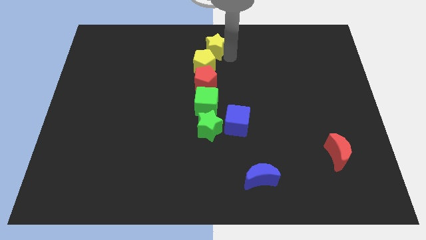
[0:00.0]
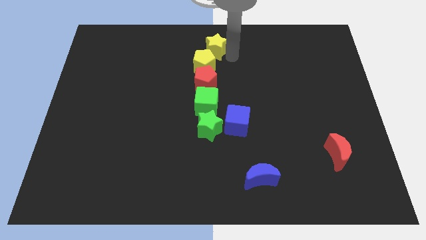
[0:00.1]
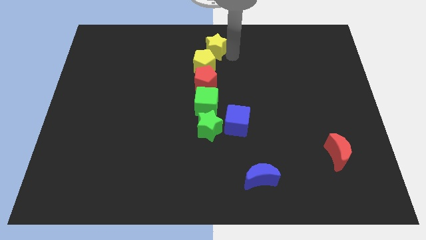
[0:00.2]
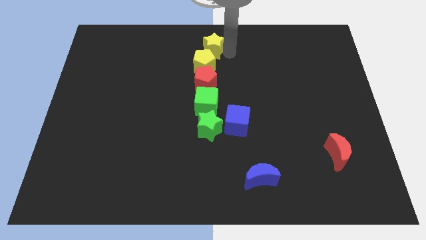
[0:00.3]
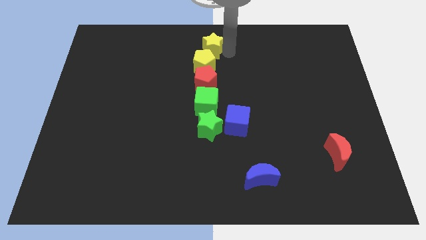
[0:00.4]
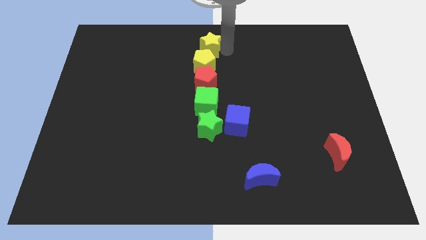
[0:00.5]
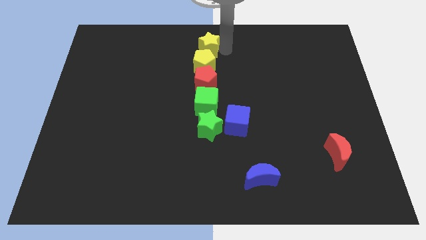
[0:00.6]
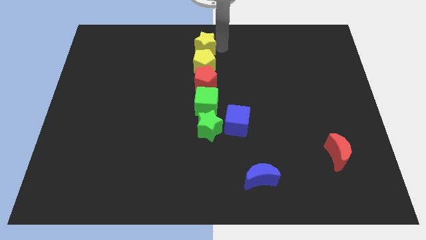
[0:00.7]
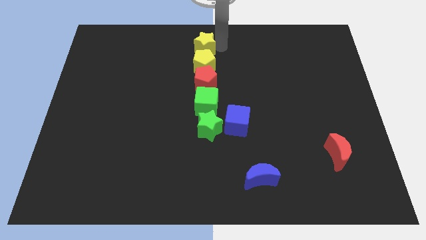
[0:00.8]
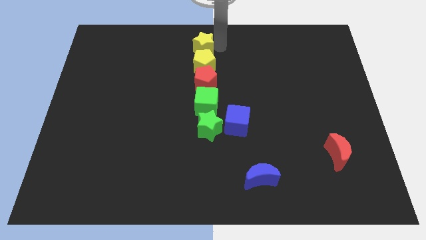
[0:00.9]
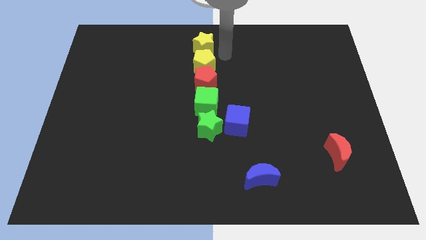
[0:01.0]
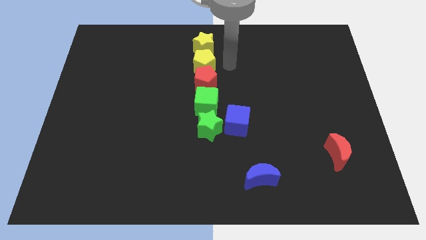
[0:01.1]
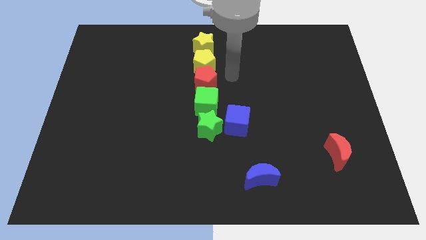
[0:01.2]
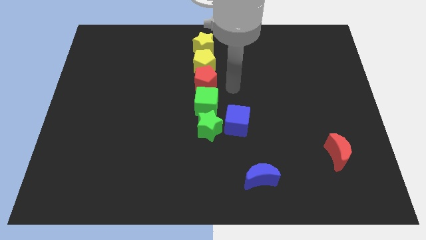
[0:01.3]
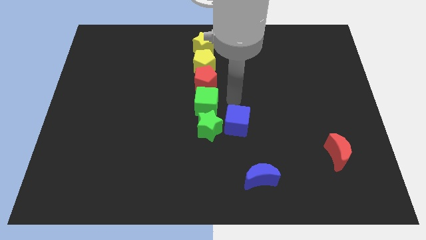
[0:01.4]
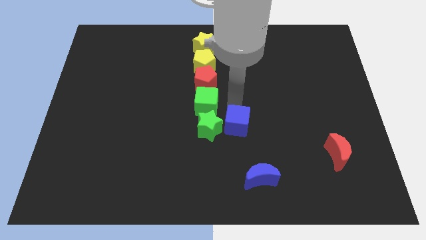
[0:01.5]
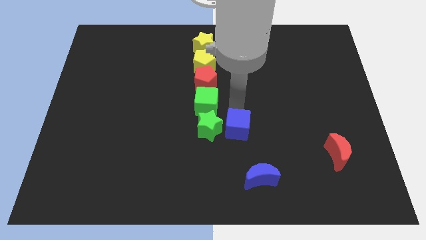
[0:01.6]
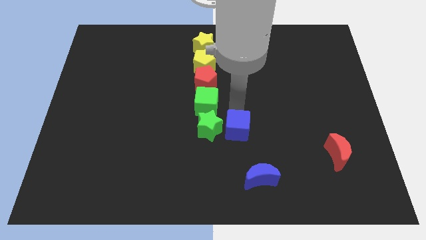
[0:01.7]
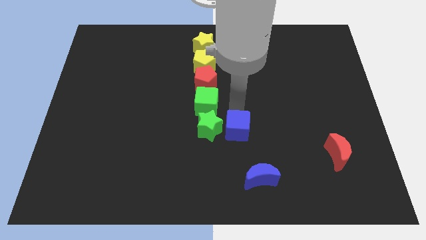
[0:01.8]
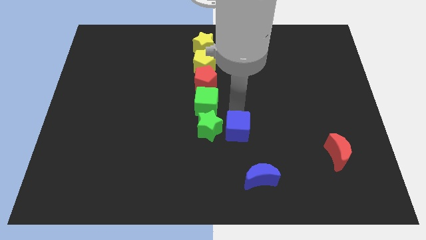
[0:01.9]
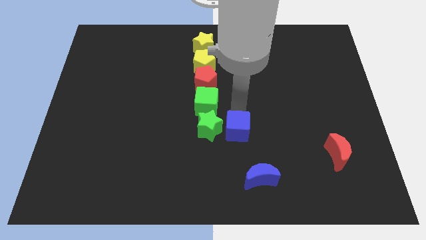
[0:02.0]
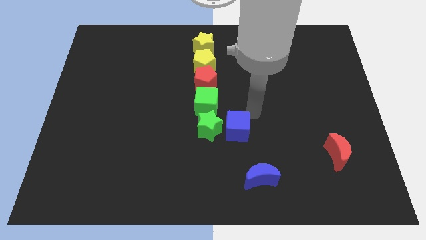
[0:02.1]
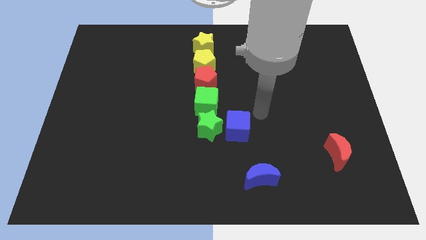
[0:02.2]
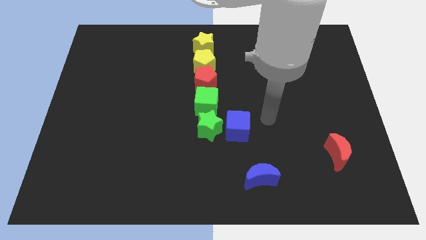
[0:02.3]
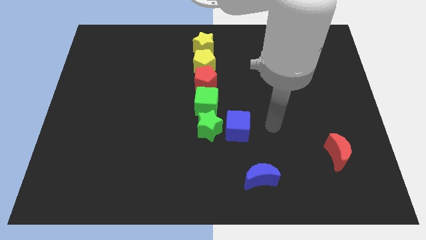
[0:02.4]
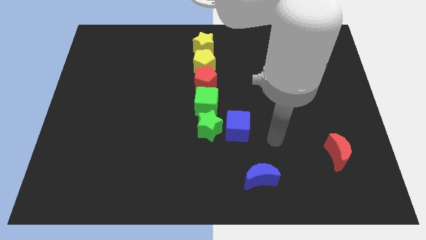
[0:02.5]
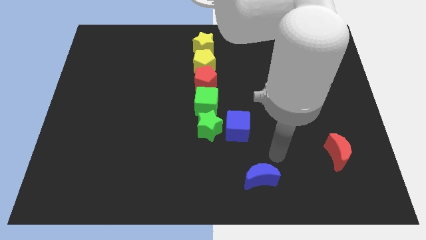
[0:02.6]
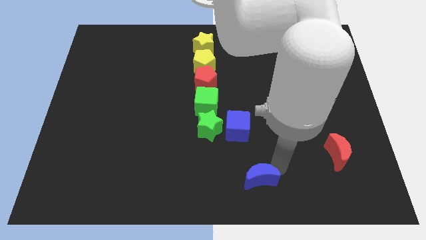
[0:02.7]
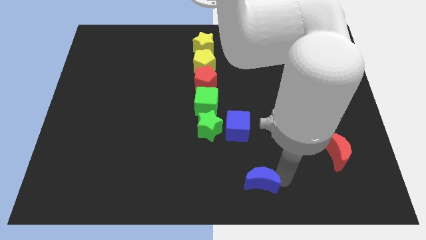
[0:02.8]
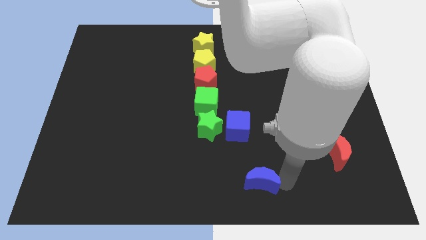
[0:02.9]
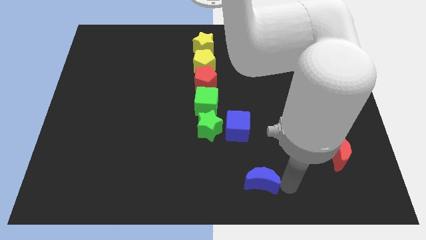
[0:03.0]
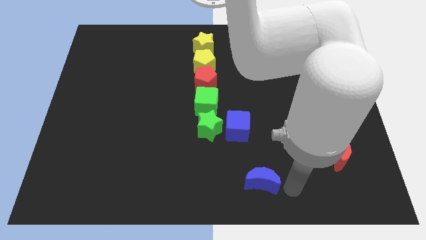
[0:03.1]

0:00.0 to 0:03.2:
put the yellow star vertically above the yellow pentagon

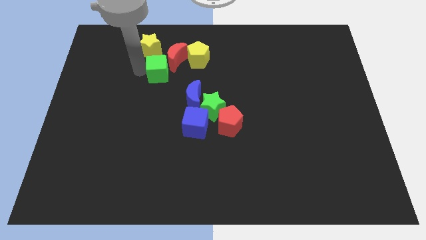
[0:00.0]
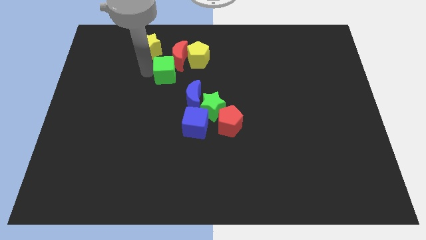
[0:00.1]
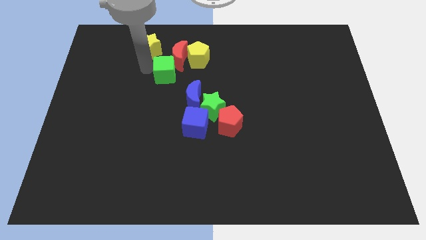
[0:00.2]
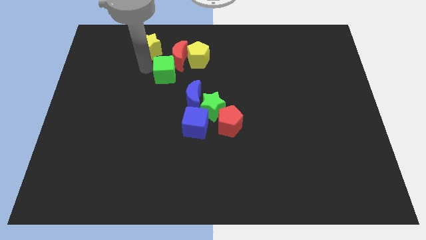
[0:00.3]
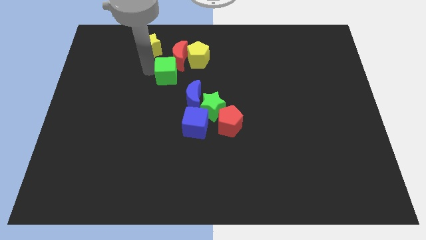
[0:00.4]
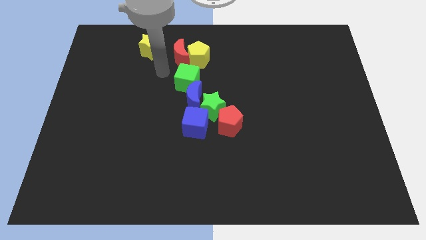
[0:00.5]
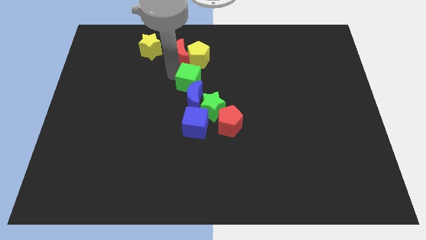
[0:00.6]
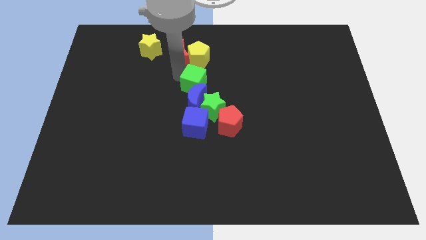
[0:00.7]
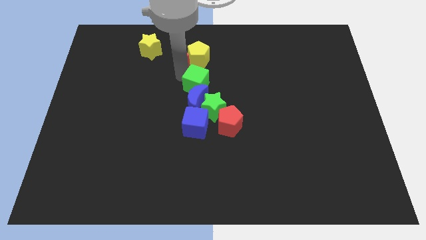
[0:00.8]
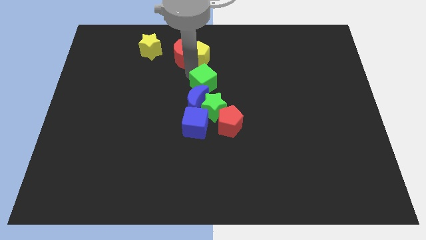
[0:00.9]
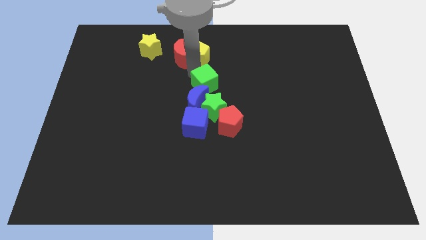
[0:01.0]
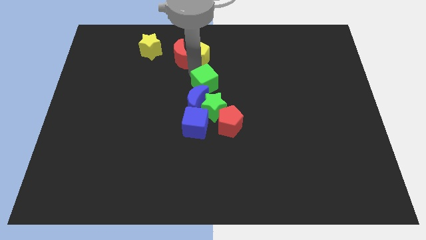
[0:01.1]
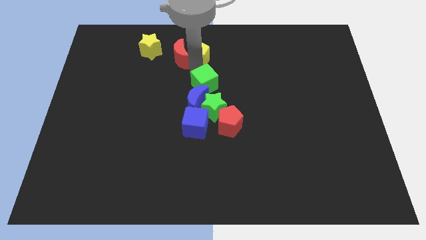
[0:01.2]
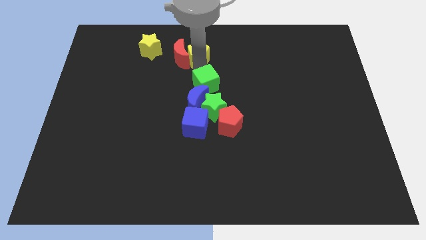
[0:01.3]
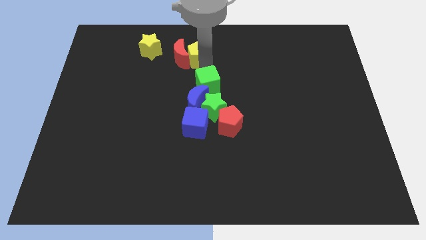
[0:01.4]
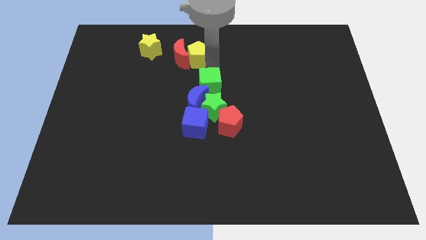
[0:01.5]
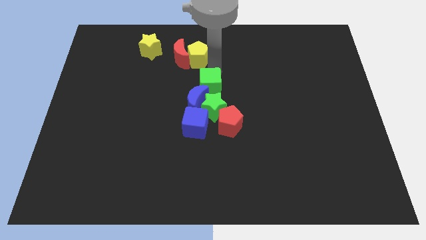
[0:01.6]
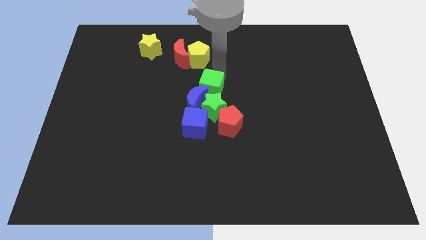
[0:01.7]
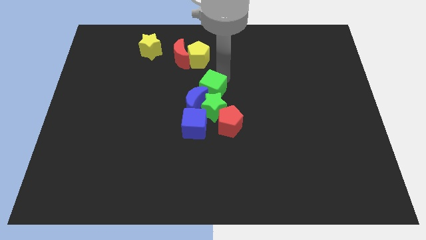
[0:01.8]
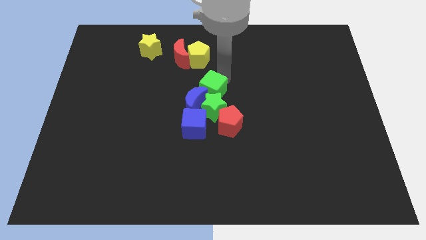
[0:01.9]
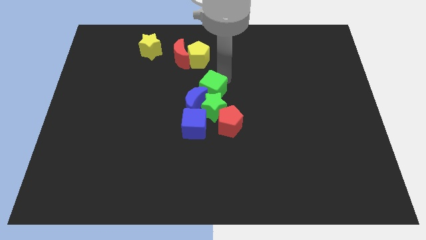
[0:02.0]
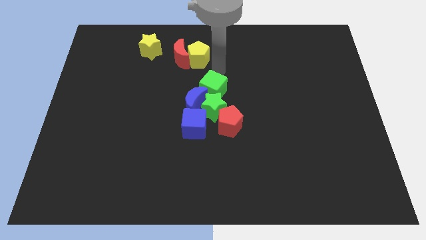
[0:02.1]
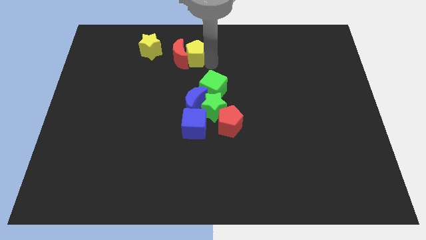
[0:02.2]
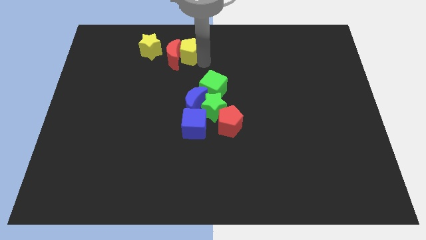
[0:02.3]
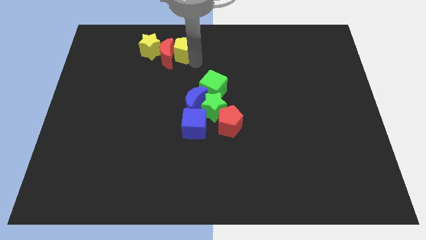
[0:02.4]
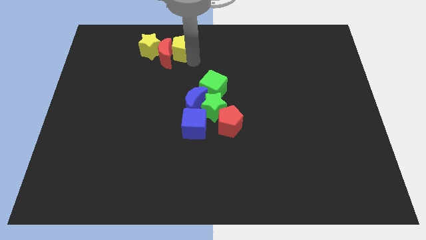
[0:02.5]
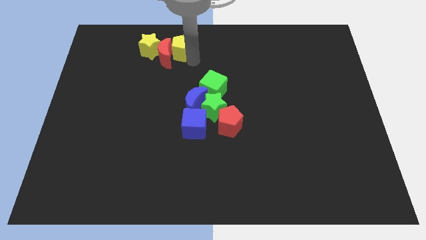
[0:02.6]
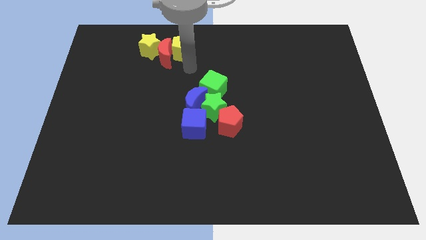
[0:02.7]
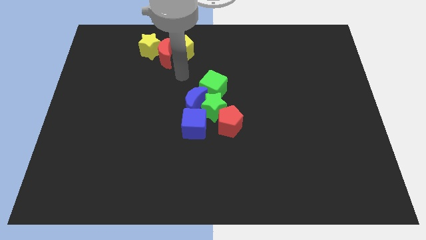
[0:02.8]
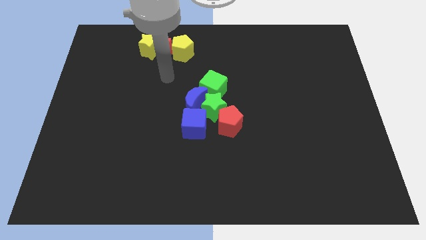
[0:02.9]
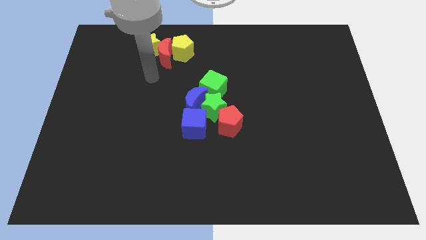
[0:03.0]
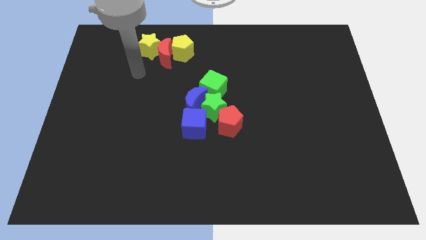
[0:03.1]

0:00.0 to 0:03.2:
move the green cube above the blue moon and green star

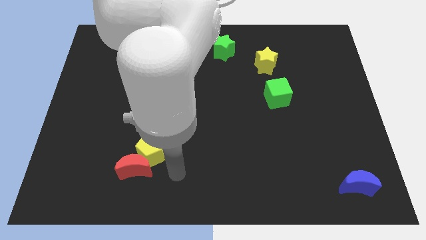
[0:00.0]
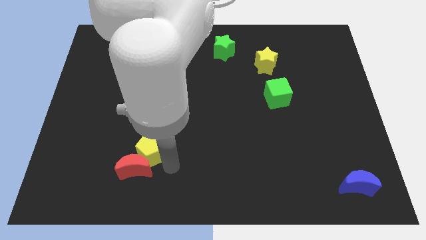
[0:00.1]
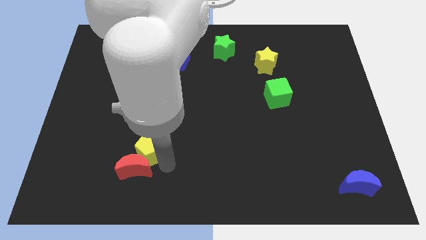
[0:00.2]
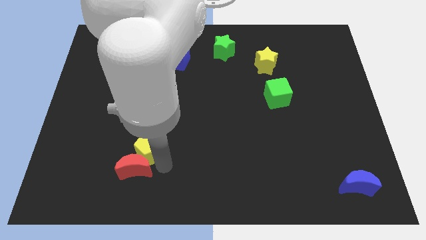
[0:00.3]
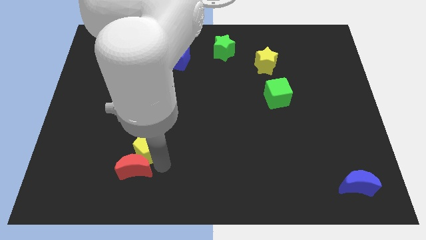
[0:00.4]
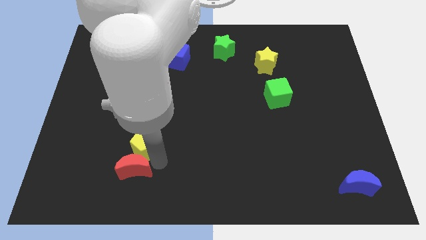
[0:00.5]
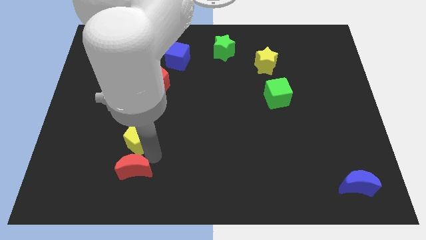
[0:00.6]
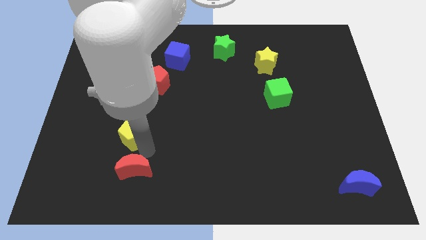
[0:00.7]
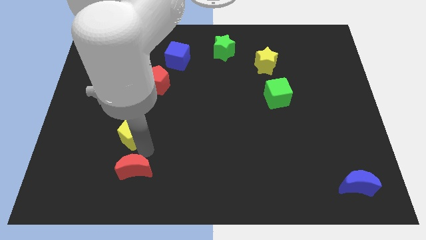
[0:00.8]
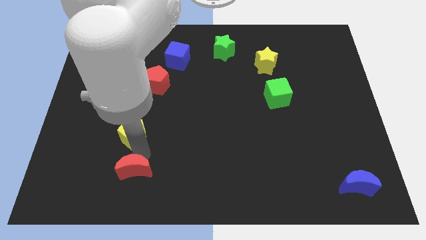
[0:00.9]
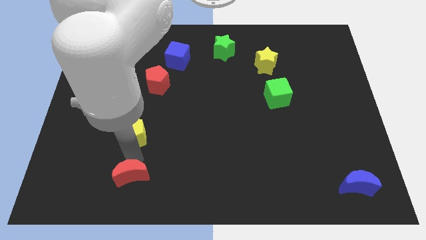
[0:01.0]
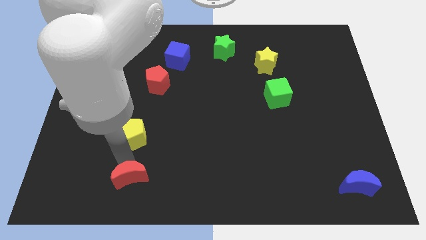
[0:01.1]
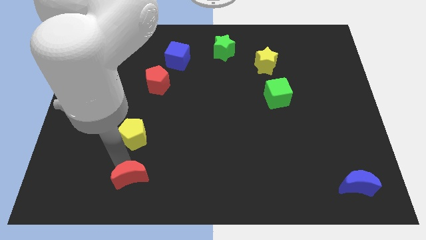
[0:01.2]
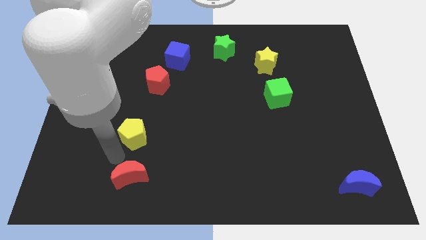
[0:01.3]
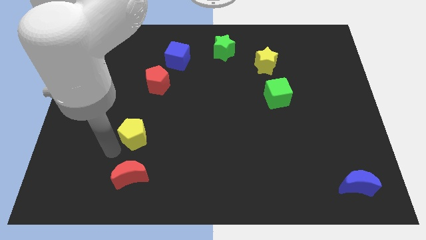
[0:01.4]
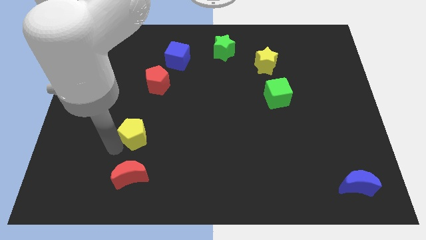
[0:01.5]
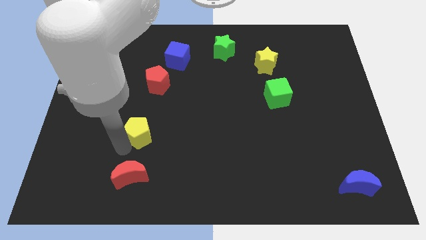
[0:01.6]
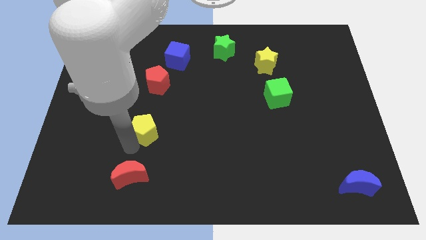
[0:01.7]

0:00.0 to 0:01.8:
separate the yellow pentagon from the red crescent

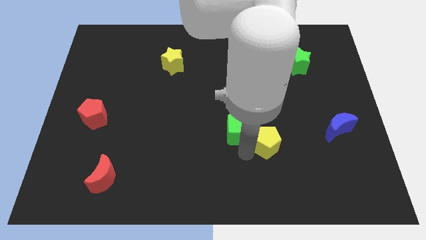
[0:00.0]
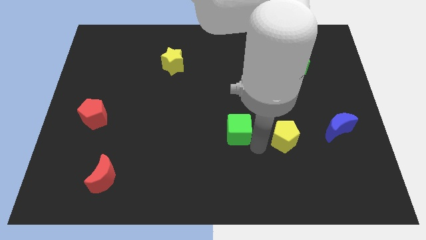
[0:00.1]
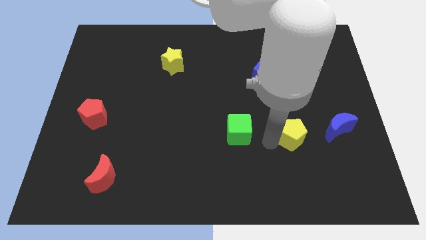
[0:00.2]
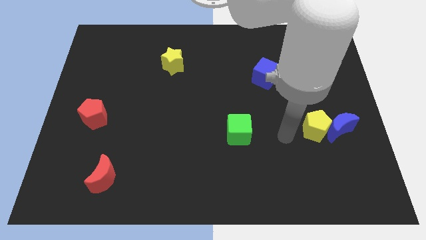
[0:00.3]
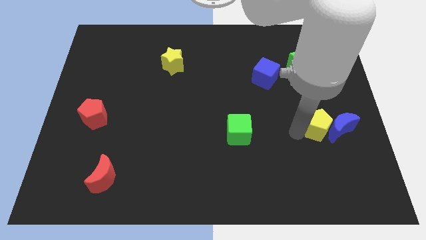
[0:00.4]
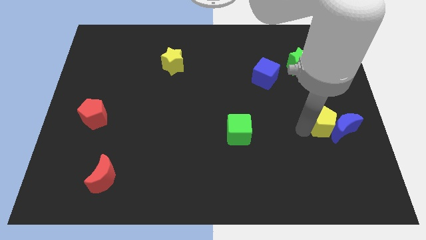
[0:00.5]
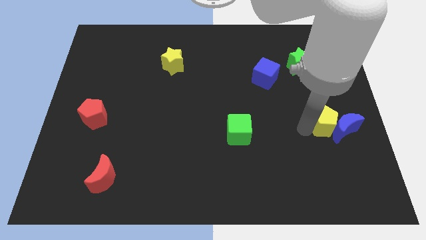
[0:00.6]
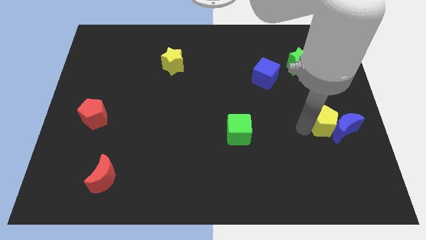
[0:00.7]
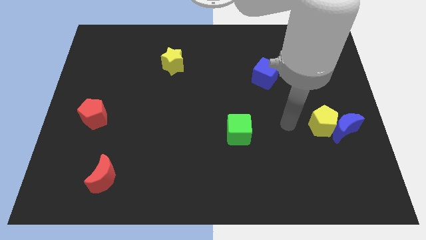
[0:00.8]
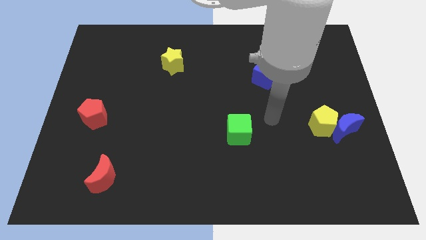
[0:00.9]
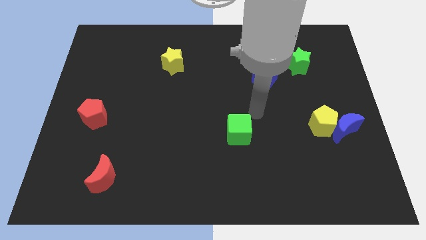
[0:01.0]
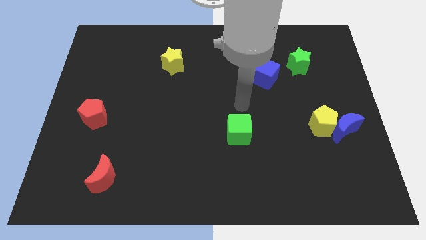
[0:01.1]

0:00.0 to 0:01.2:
move the yellow pentagon into the blue moon
